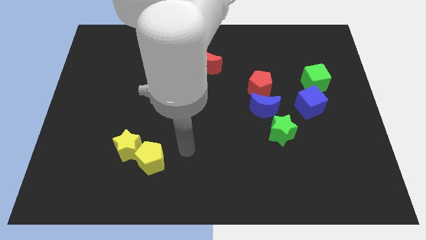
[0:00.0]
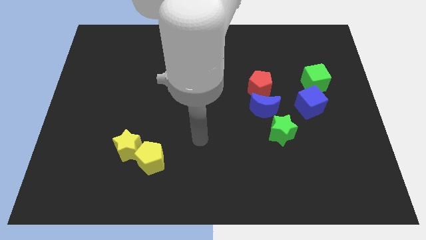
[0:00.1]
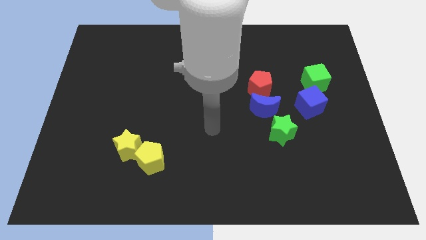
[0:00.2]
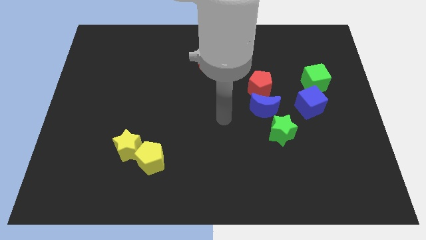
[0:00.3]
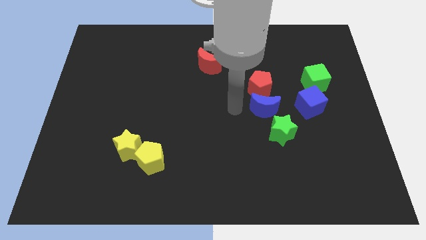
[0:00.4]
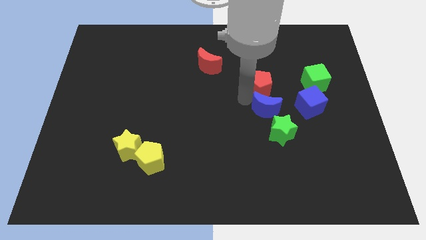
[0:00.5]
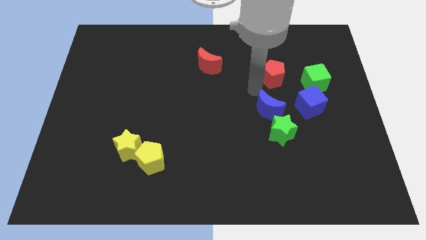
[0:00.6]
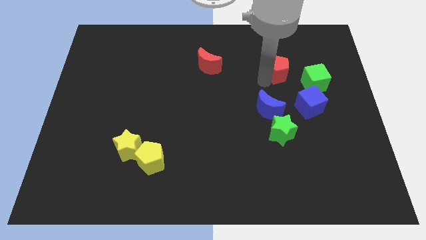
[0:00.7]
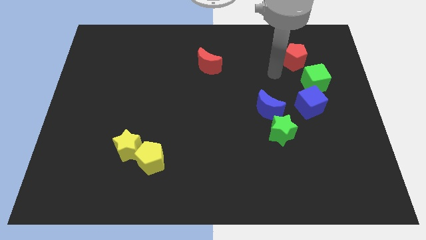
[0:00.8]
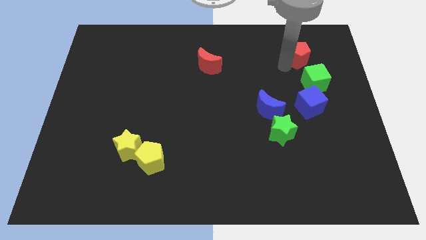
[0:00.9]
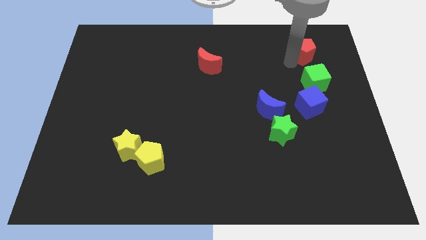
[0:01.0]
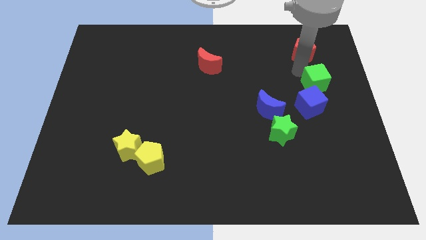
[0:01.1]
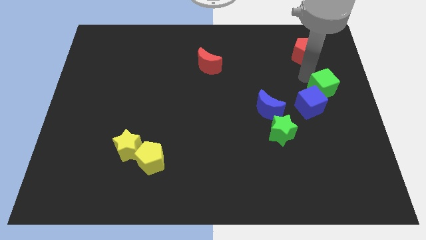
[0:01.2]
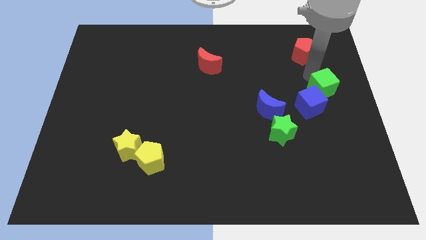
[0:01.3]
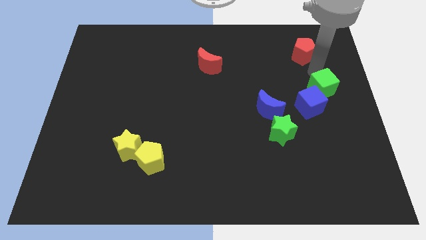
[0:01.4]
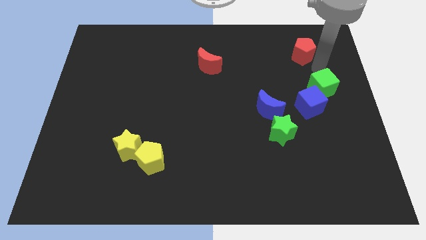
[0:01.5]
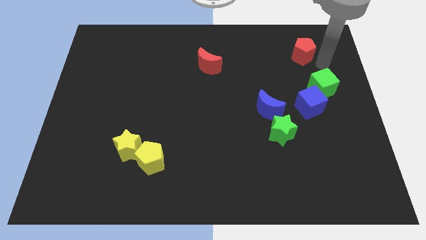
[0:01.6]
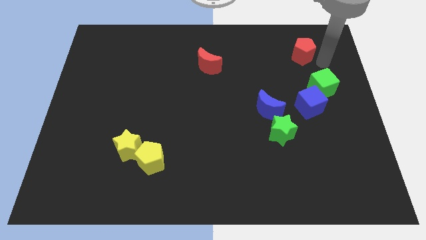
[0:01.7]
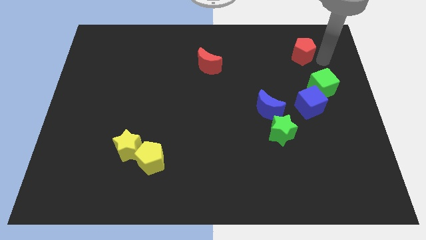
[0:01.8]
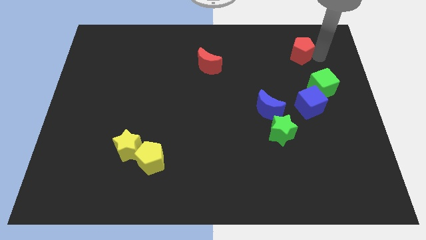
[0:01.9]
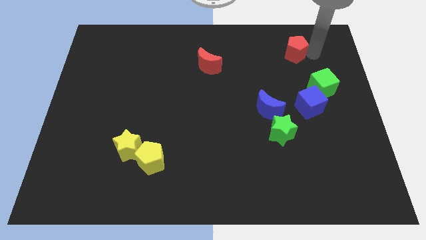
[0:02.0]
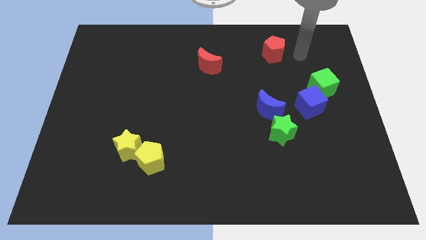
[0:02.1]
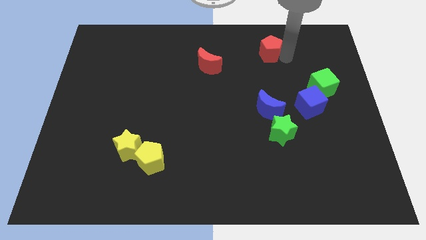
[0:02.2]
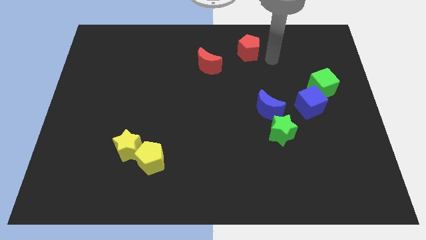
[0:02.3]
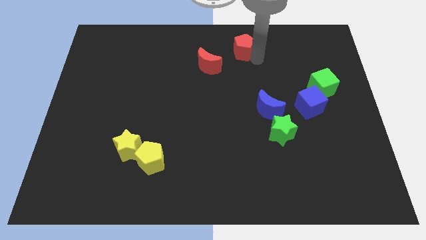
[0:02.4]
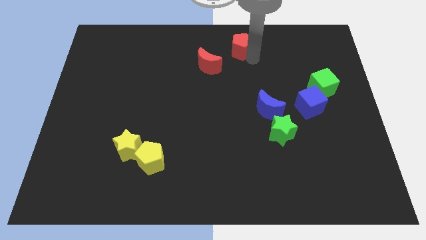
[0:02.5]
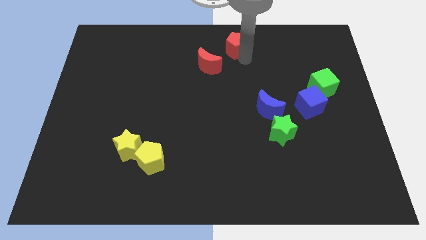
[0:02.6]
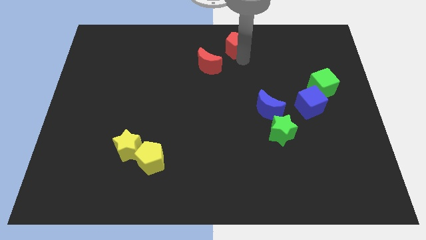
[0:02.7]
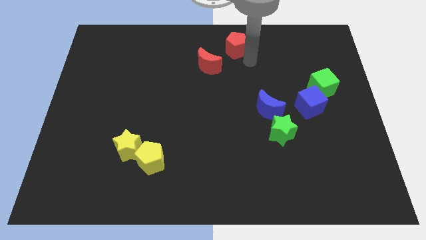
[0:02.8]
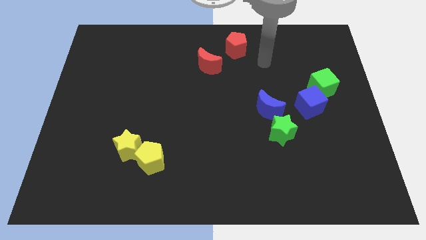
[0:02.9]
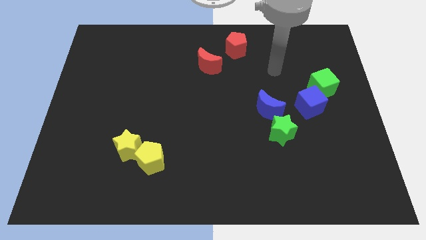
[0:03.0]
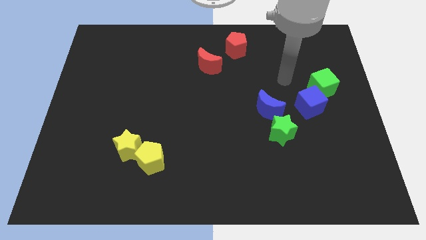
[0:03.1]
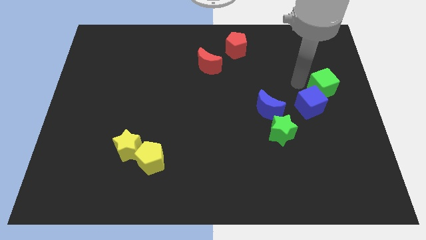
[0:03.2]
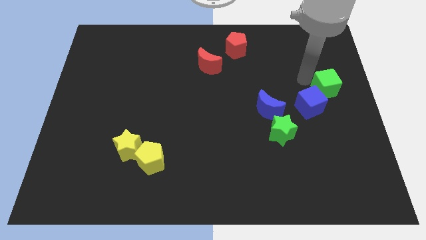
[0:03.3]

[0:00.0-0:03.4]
move the red pentagon towards the top center of the board

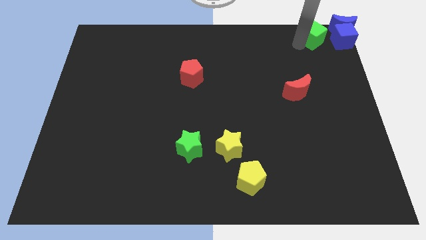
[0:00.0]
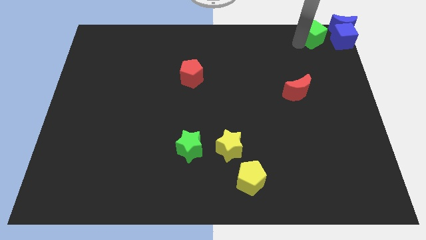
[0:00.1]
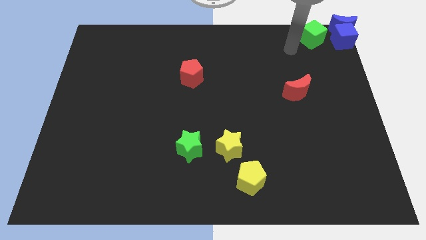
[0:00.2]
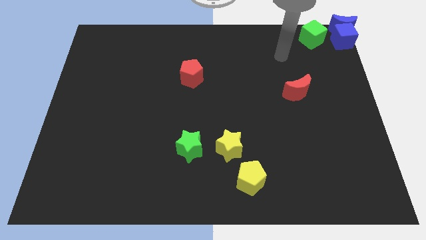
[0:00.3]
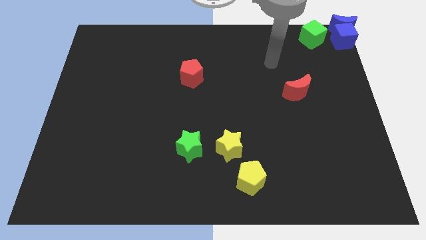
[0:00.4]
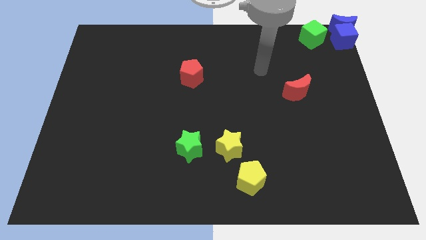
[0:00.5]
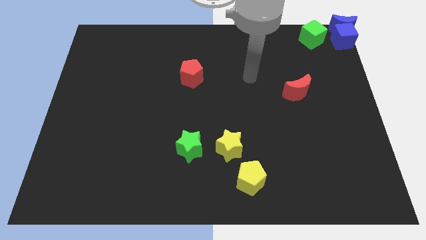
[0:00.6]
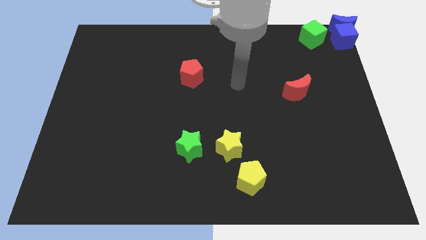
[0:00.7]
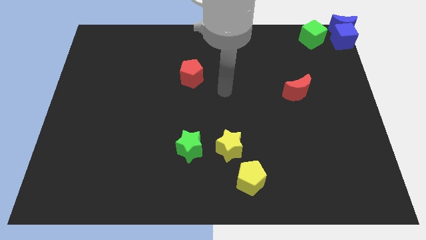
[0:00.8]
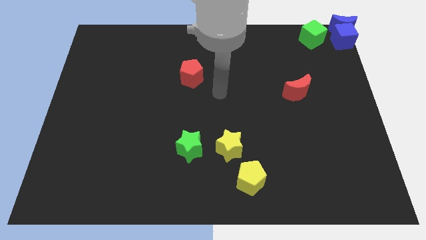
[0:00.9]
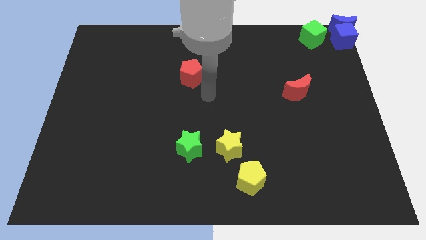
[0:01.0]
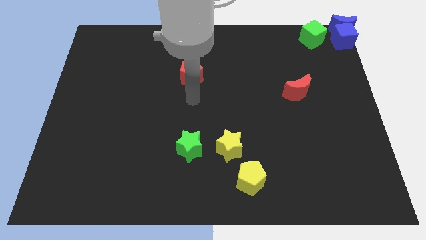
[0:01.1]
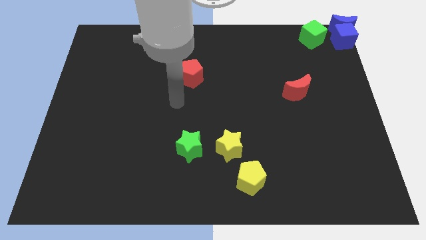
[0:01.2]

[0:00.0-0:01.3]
move arm away from green cube

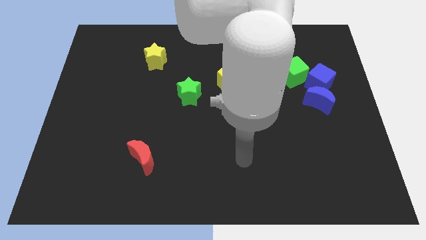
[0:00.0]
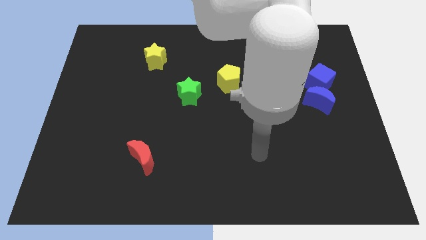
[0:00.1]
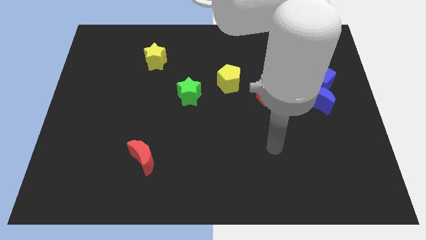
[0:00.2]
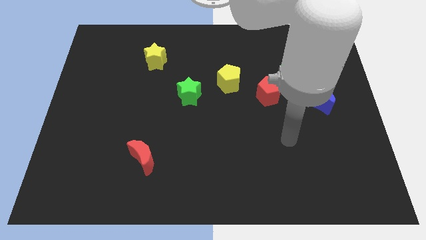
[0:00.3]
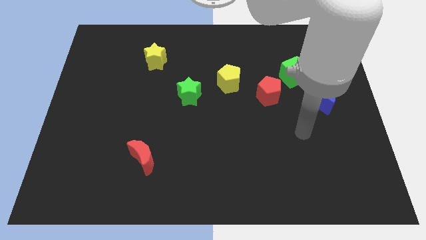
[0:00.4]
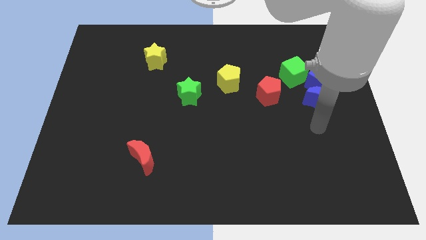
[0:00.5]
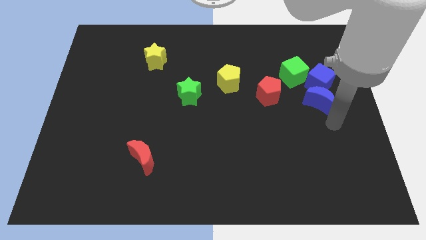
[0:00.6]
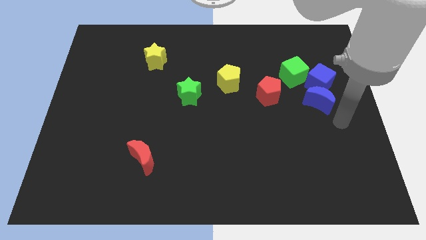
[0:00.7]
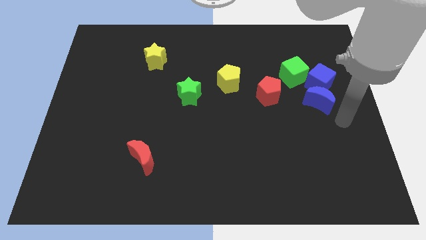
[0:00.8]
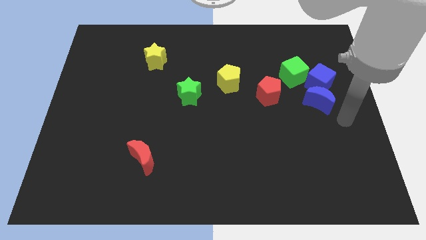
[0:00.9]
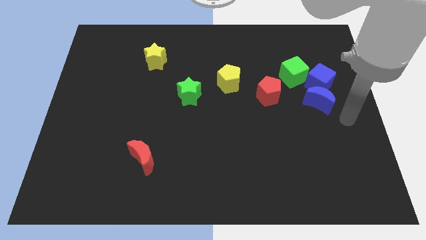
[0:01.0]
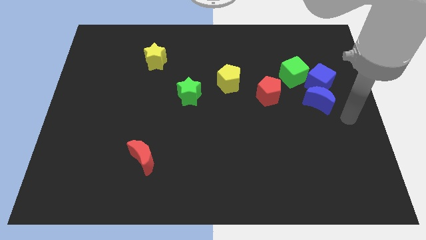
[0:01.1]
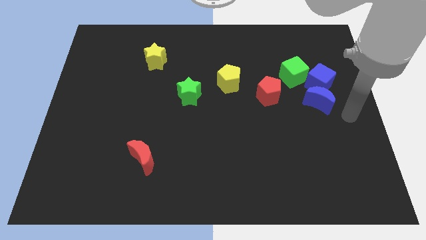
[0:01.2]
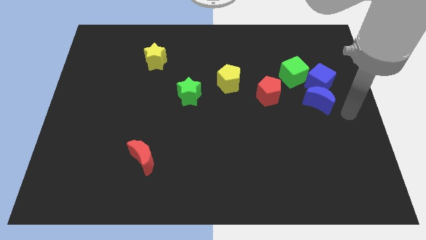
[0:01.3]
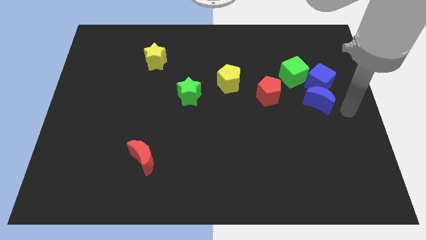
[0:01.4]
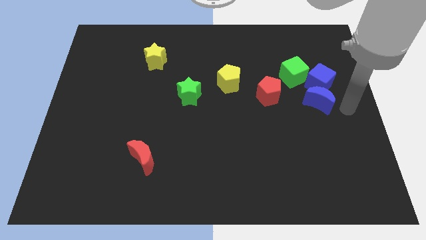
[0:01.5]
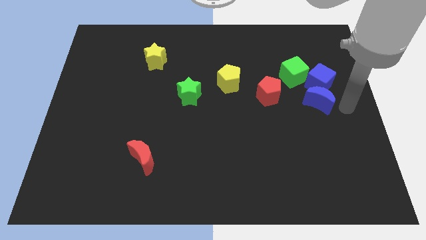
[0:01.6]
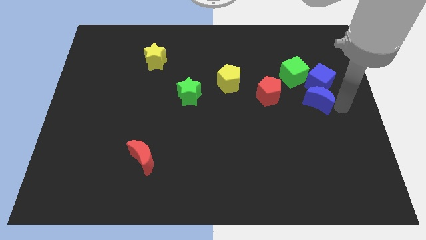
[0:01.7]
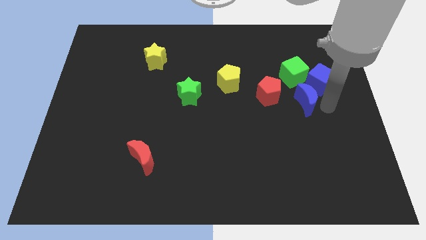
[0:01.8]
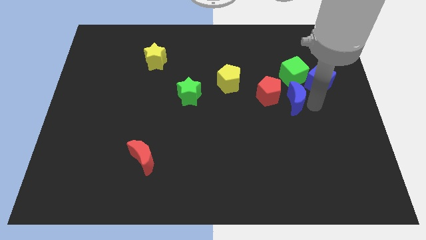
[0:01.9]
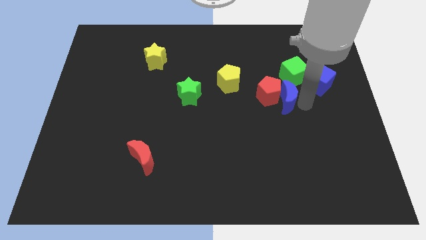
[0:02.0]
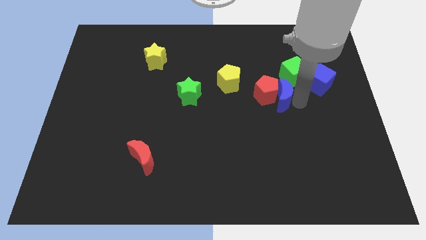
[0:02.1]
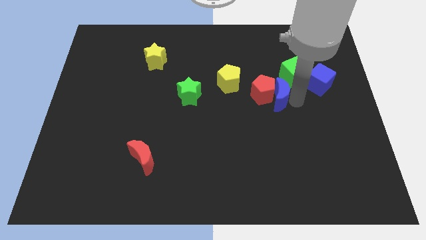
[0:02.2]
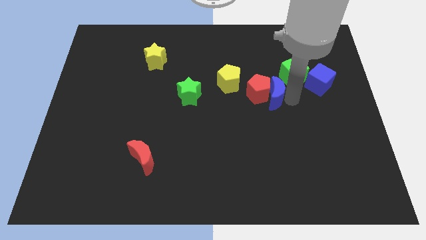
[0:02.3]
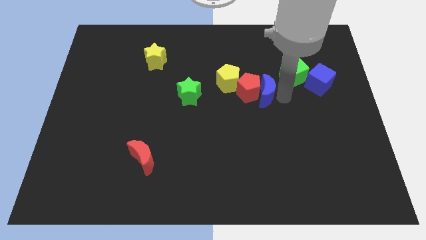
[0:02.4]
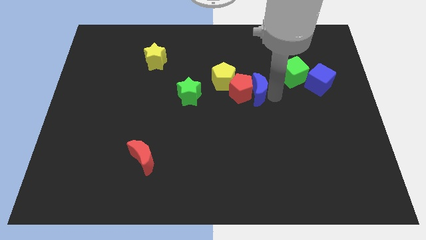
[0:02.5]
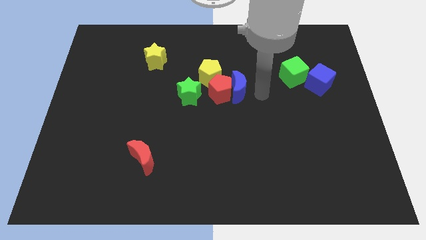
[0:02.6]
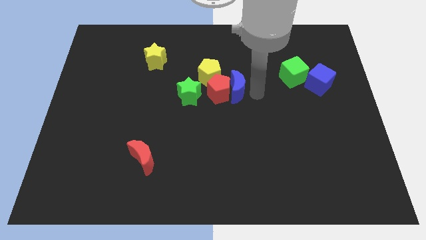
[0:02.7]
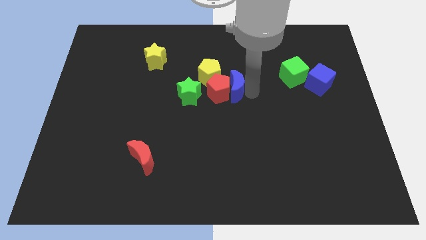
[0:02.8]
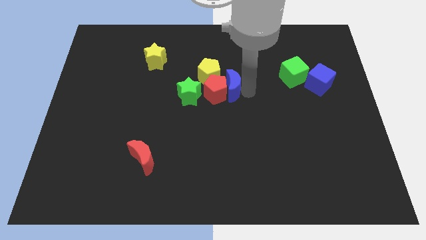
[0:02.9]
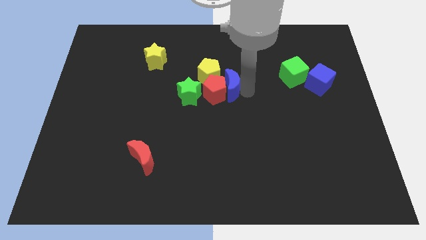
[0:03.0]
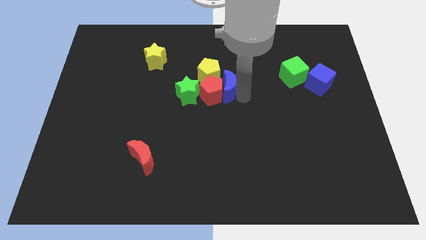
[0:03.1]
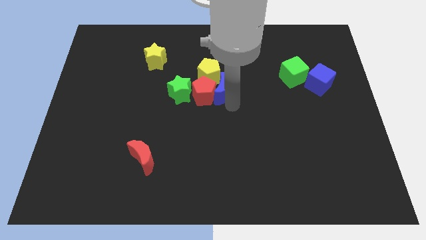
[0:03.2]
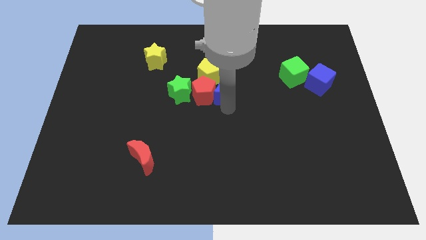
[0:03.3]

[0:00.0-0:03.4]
push the blue crescent along with the red pentagon to the bottom of the yellow pentagon

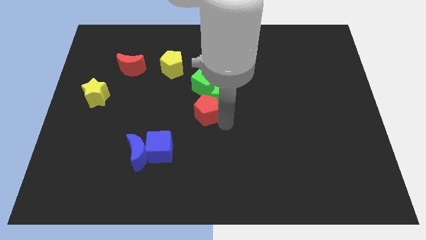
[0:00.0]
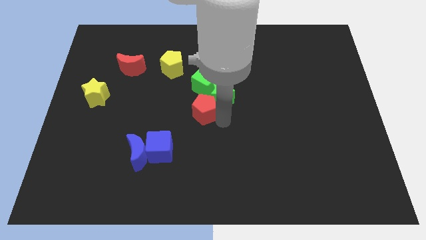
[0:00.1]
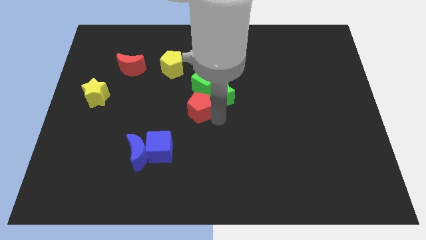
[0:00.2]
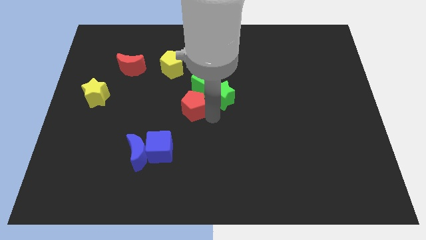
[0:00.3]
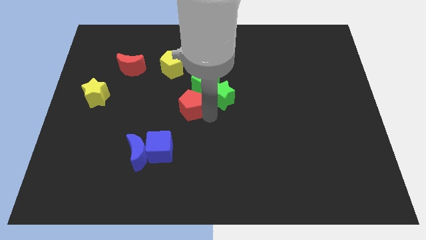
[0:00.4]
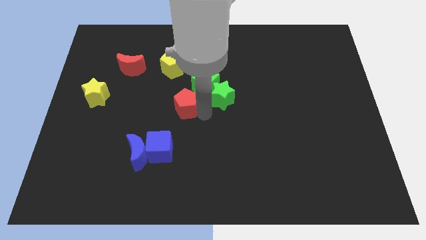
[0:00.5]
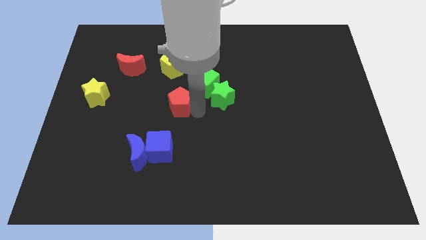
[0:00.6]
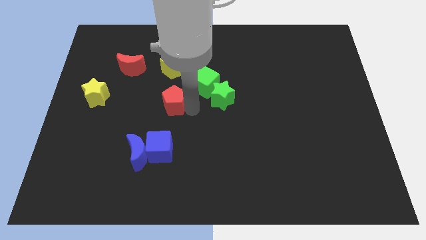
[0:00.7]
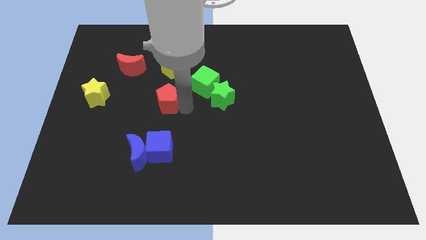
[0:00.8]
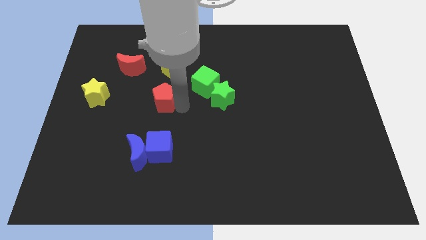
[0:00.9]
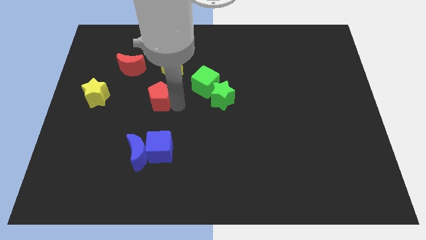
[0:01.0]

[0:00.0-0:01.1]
place red pentagon to the left of green star
